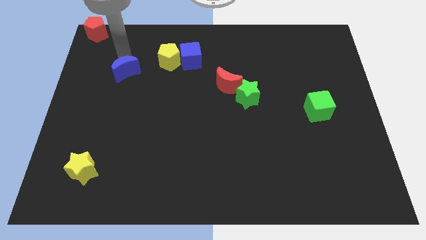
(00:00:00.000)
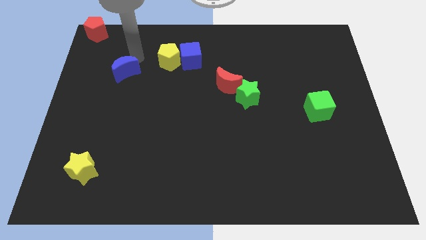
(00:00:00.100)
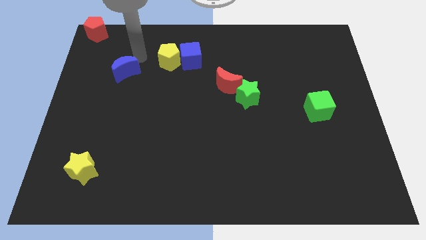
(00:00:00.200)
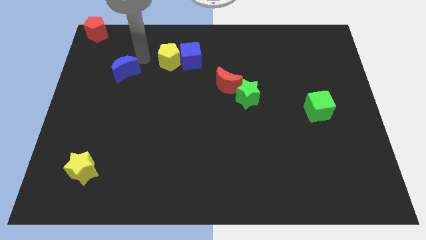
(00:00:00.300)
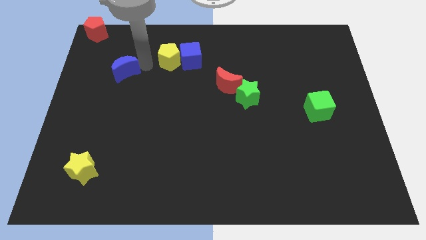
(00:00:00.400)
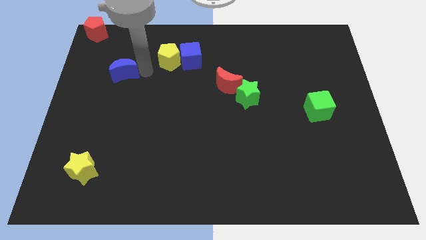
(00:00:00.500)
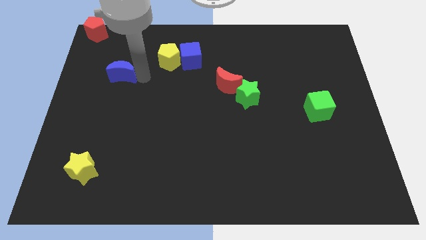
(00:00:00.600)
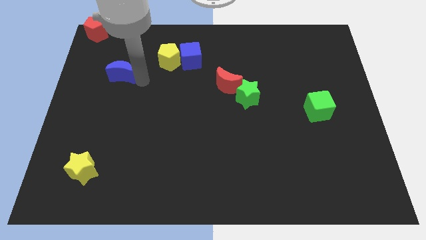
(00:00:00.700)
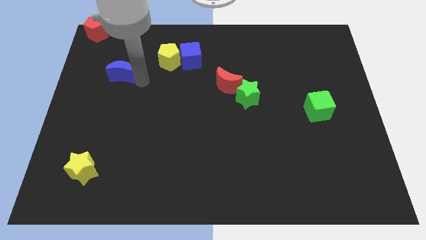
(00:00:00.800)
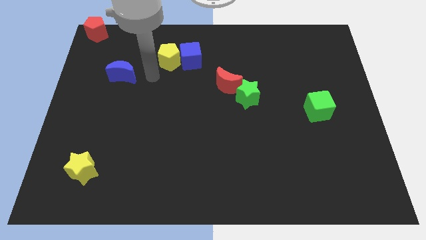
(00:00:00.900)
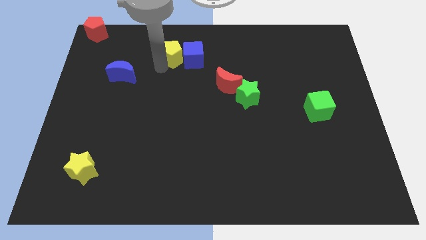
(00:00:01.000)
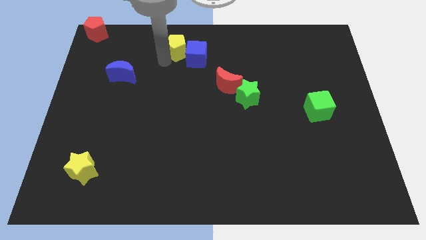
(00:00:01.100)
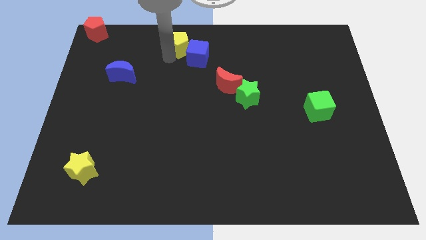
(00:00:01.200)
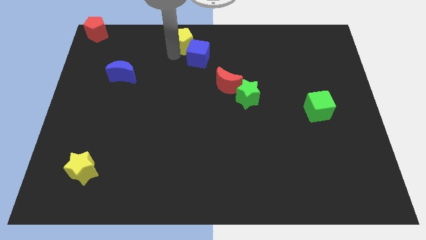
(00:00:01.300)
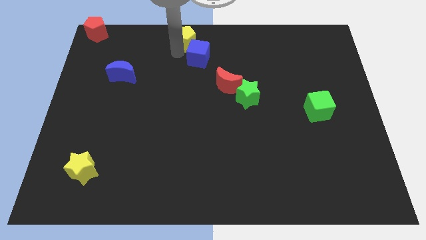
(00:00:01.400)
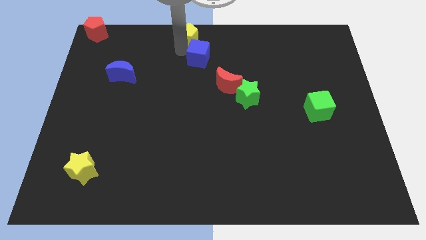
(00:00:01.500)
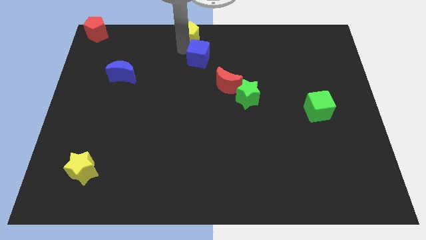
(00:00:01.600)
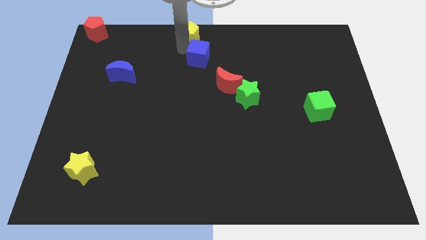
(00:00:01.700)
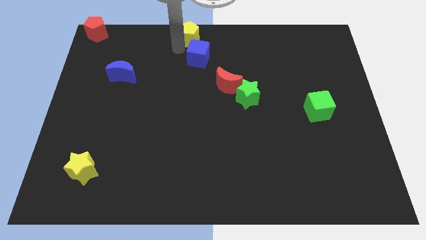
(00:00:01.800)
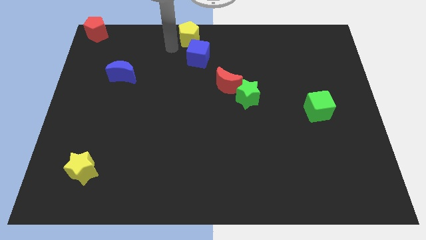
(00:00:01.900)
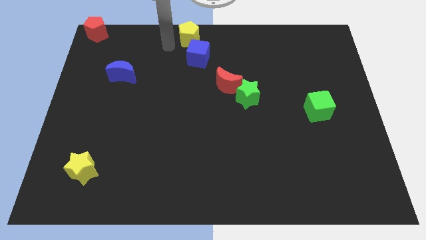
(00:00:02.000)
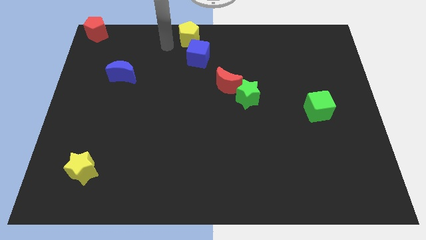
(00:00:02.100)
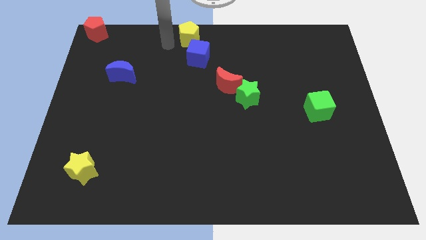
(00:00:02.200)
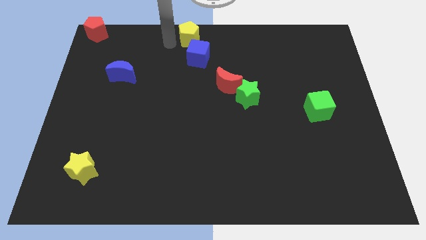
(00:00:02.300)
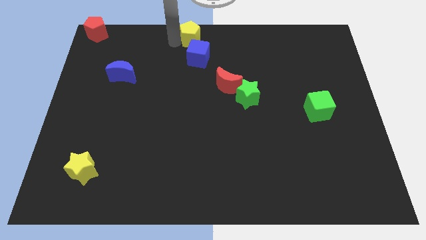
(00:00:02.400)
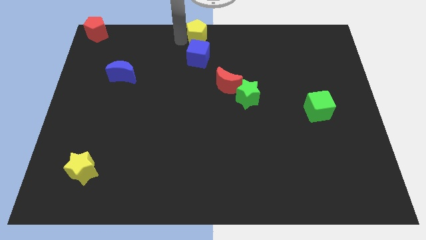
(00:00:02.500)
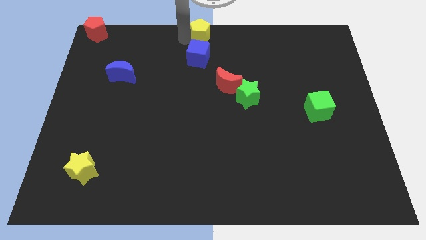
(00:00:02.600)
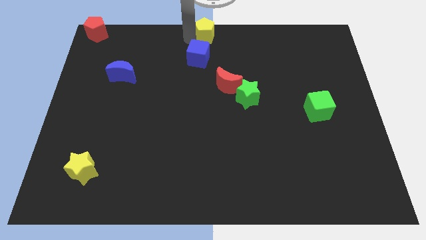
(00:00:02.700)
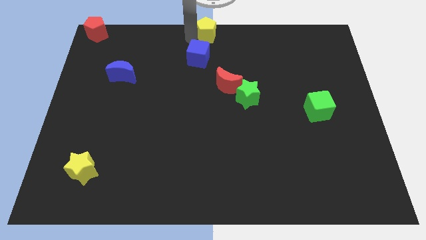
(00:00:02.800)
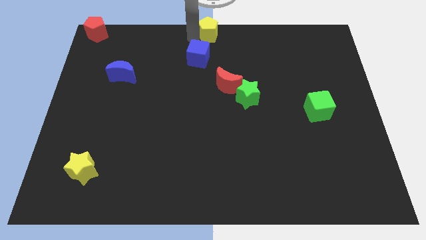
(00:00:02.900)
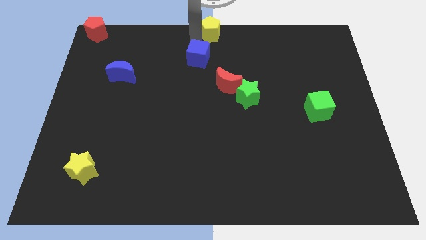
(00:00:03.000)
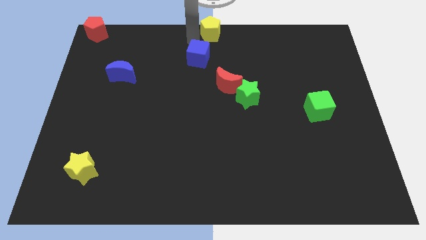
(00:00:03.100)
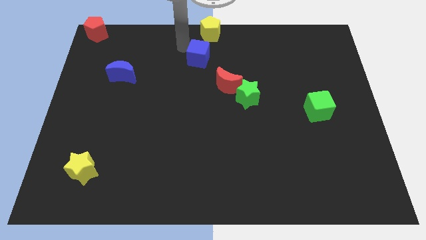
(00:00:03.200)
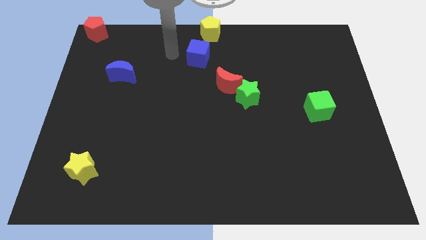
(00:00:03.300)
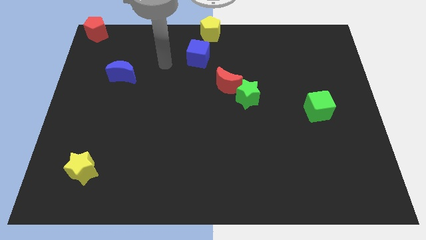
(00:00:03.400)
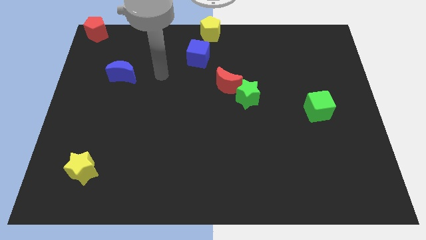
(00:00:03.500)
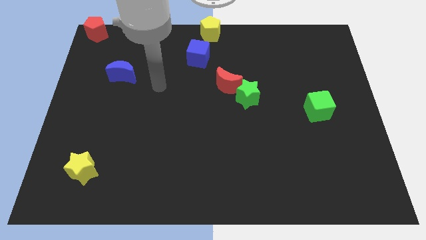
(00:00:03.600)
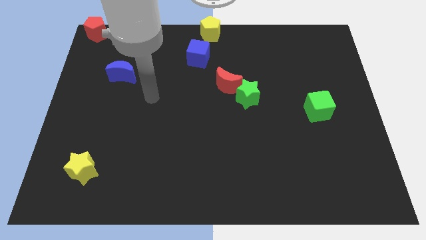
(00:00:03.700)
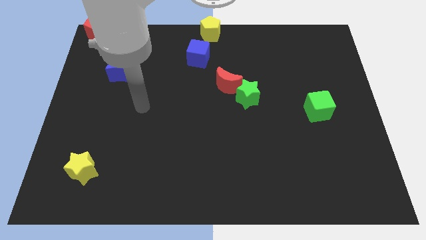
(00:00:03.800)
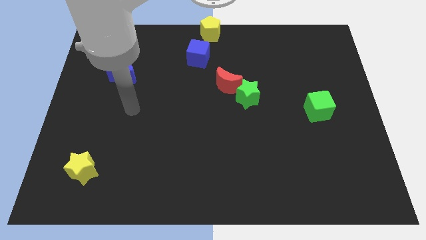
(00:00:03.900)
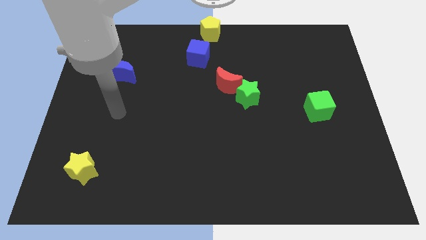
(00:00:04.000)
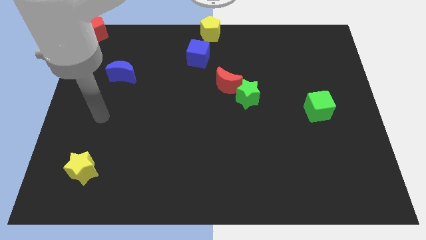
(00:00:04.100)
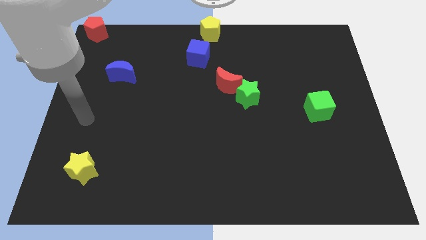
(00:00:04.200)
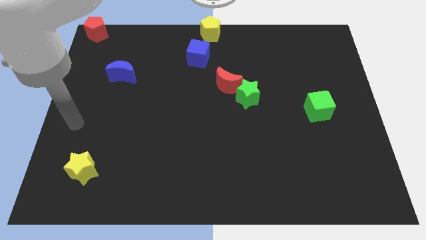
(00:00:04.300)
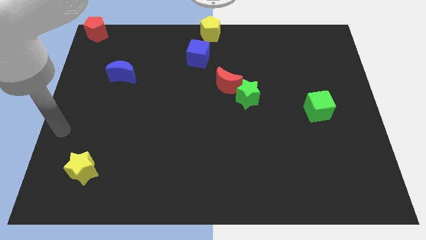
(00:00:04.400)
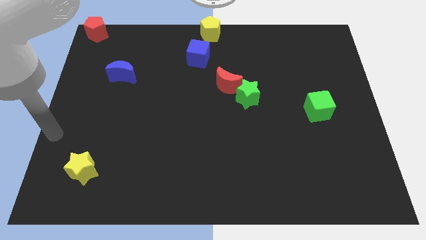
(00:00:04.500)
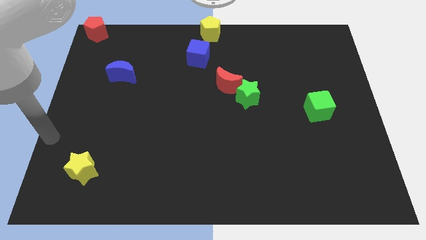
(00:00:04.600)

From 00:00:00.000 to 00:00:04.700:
place the yellow pentagon at the top center

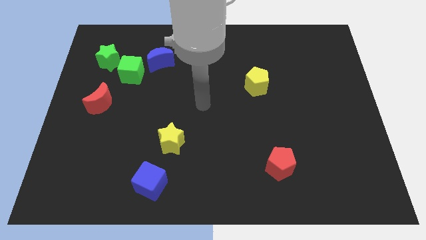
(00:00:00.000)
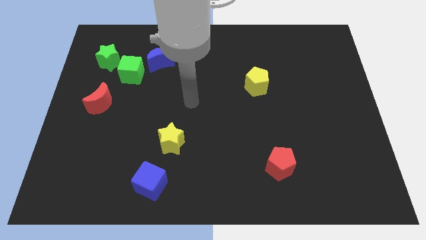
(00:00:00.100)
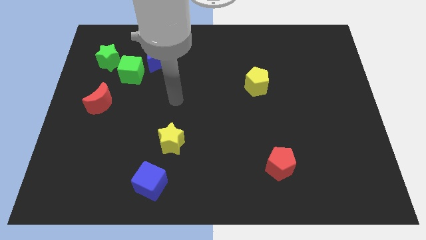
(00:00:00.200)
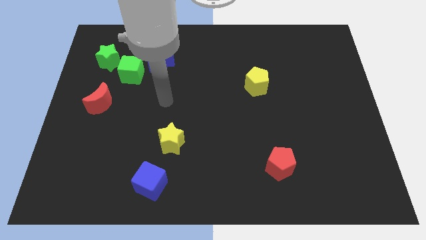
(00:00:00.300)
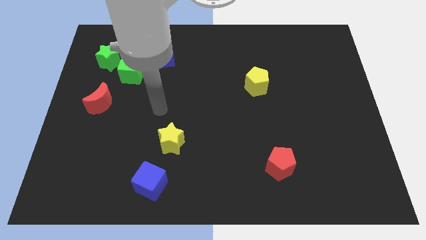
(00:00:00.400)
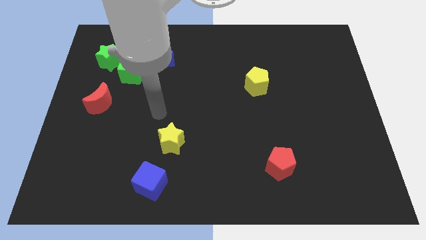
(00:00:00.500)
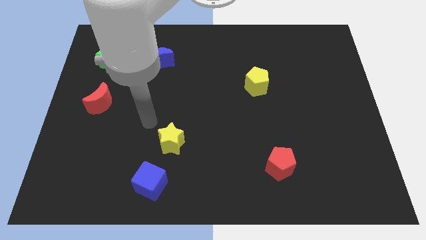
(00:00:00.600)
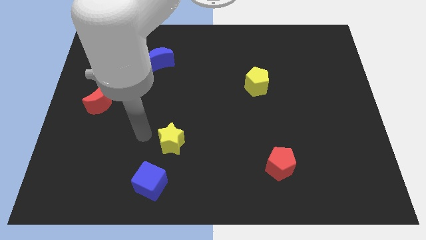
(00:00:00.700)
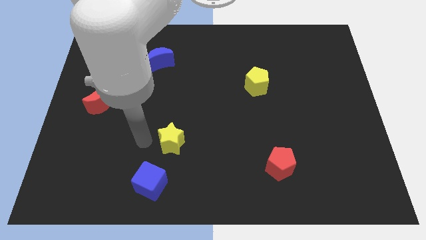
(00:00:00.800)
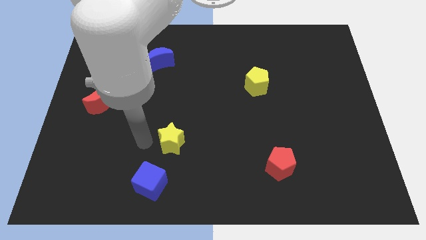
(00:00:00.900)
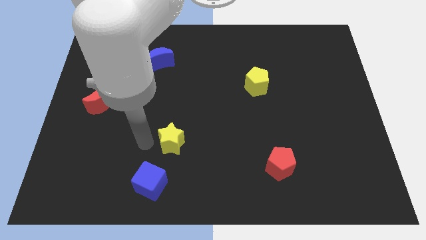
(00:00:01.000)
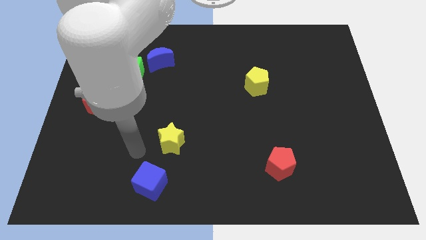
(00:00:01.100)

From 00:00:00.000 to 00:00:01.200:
point your arm at the left of the yellow star

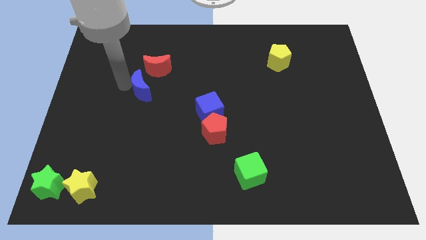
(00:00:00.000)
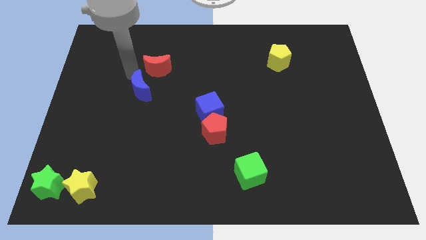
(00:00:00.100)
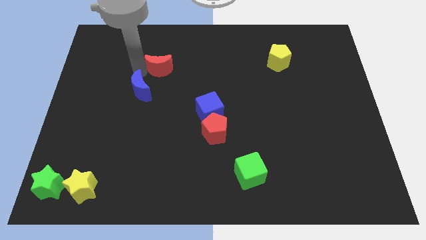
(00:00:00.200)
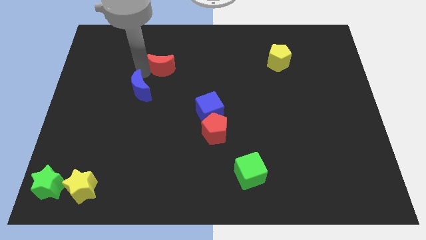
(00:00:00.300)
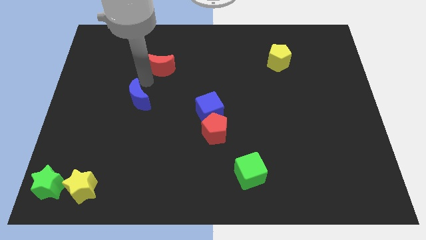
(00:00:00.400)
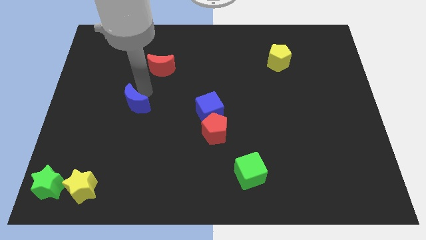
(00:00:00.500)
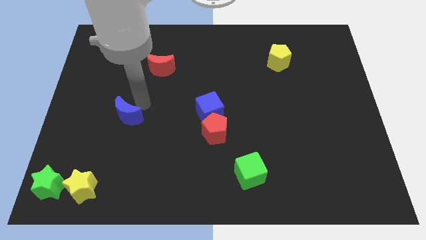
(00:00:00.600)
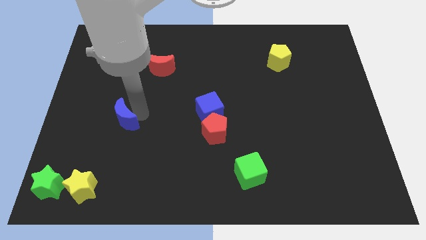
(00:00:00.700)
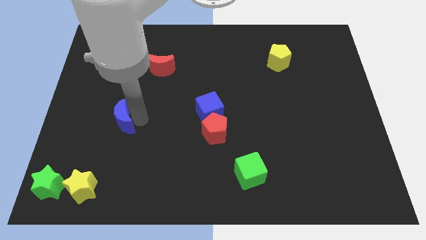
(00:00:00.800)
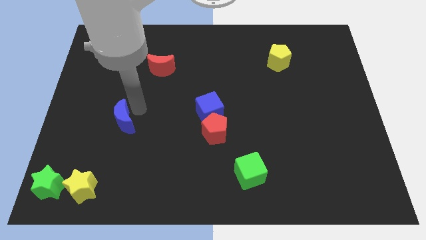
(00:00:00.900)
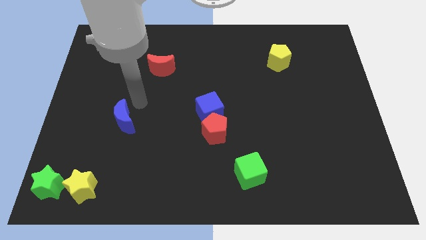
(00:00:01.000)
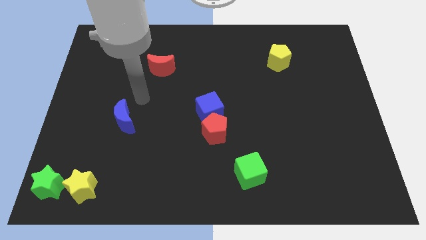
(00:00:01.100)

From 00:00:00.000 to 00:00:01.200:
put the blue moon to the left of the blue cube

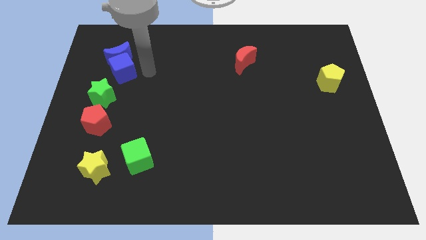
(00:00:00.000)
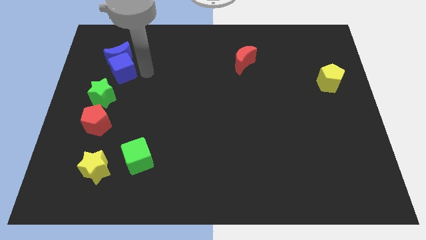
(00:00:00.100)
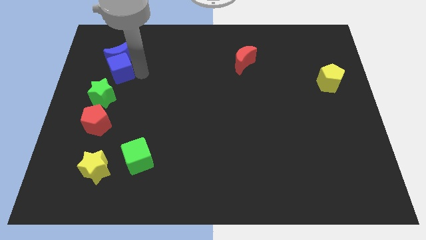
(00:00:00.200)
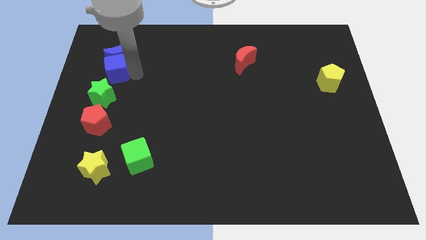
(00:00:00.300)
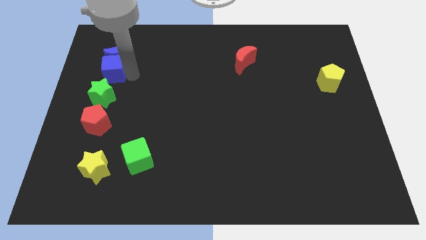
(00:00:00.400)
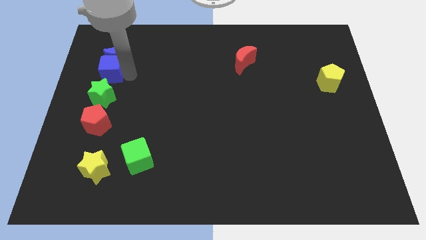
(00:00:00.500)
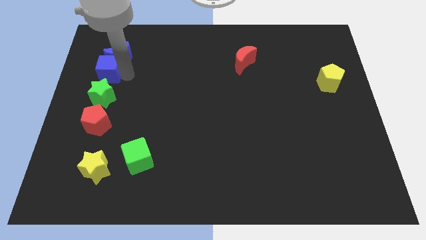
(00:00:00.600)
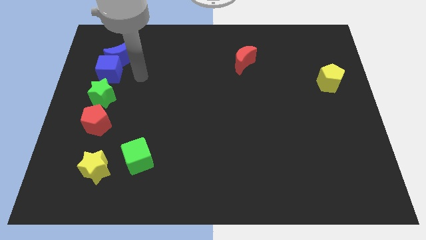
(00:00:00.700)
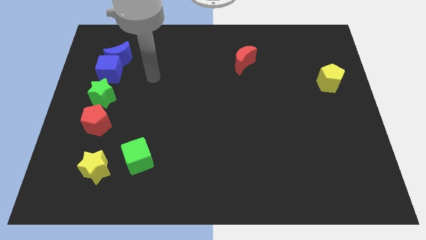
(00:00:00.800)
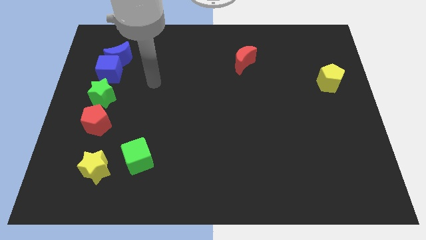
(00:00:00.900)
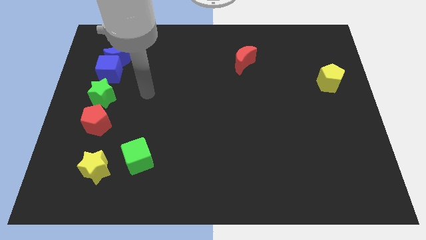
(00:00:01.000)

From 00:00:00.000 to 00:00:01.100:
push the blue cube to the top of the green star

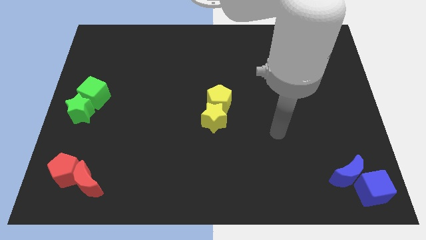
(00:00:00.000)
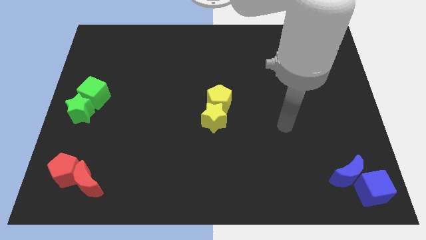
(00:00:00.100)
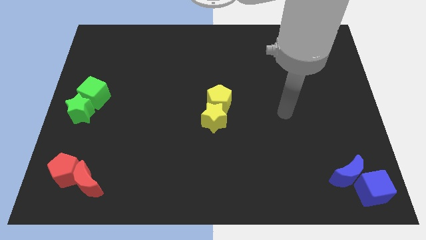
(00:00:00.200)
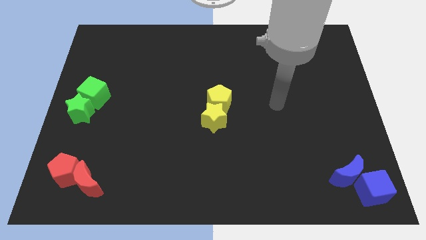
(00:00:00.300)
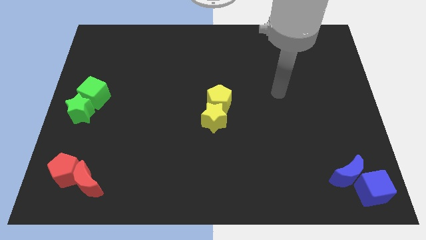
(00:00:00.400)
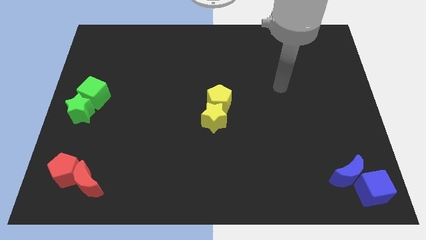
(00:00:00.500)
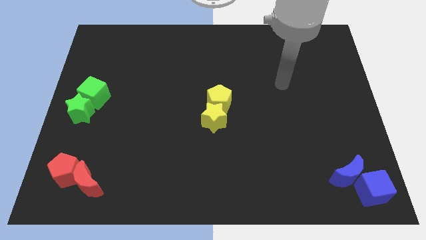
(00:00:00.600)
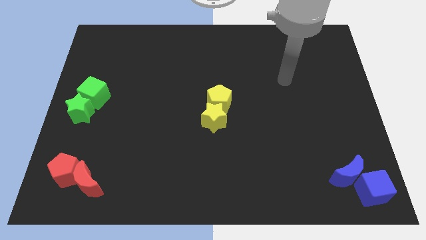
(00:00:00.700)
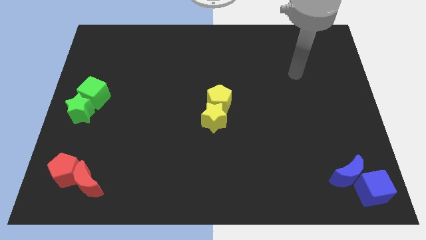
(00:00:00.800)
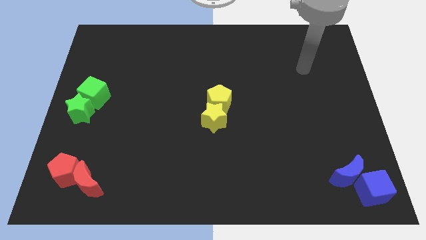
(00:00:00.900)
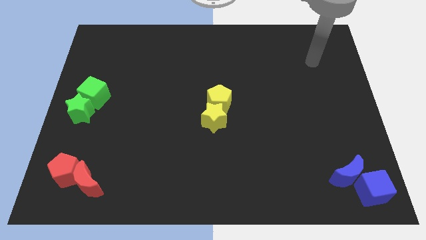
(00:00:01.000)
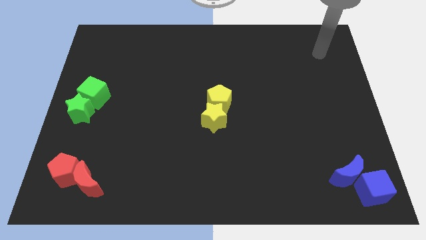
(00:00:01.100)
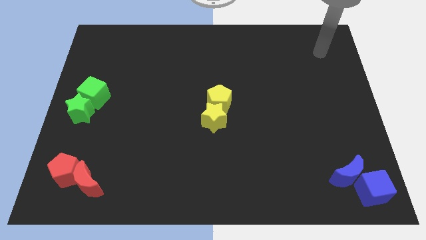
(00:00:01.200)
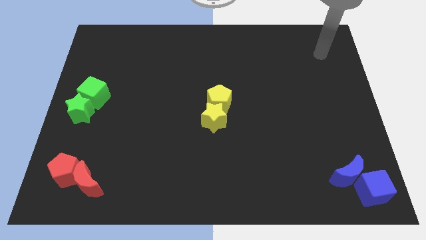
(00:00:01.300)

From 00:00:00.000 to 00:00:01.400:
move your hand towards the top right
